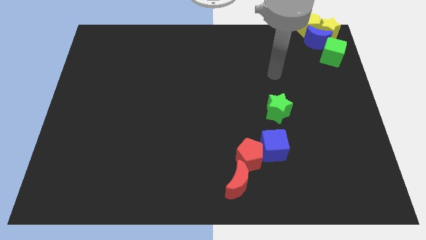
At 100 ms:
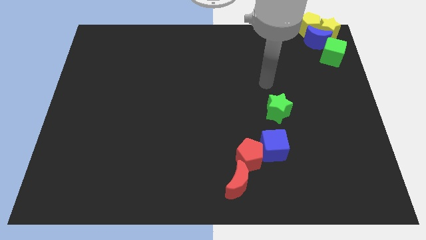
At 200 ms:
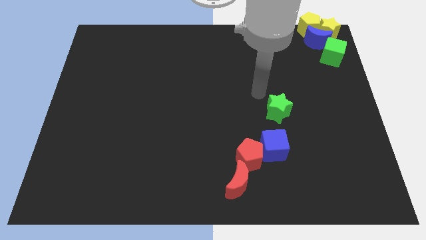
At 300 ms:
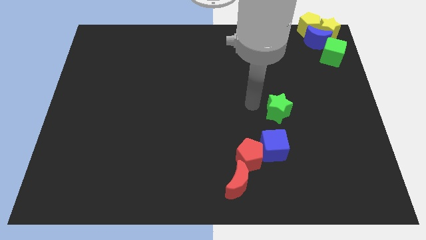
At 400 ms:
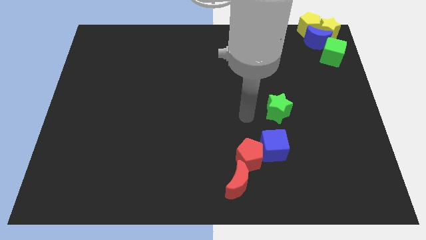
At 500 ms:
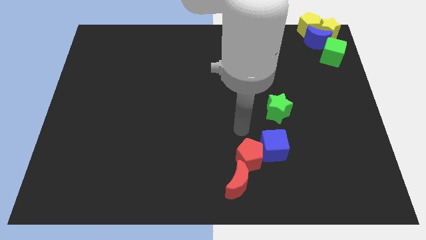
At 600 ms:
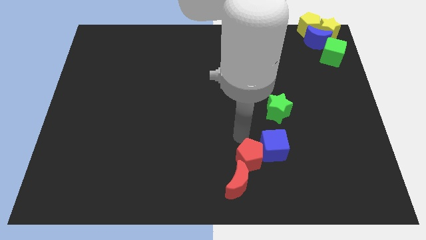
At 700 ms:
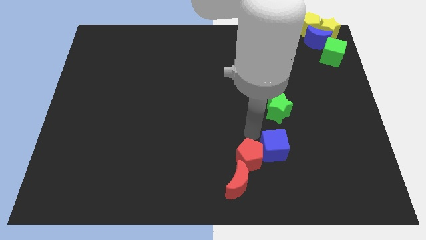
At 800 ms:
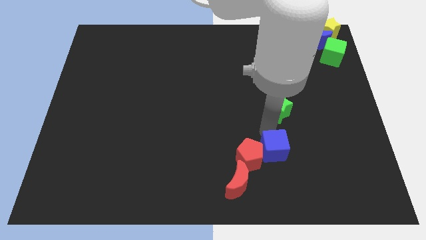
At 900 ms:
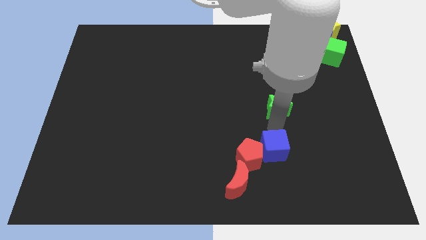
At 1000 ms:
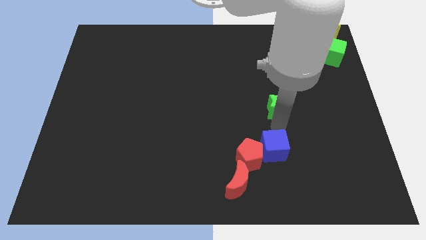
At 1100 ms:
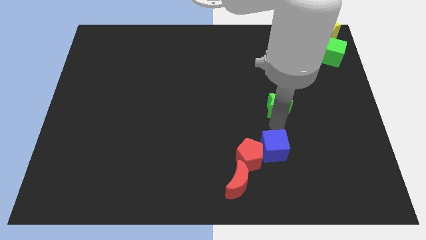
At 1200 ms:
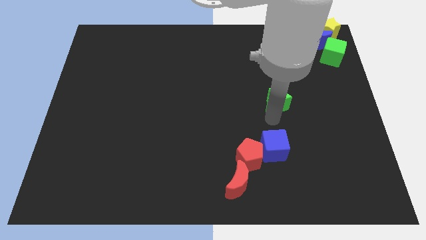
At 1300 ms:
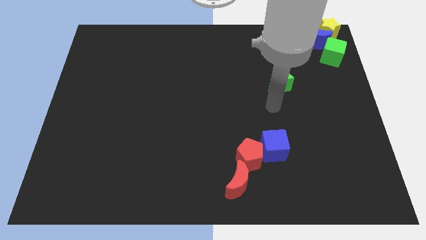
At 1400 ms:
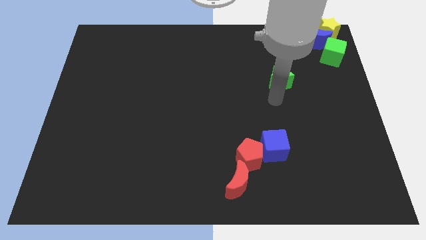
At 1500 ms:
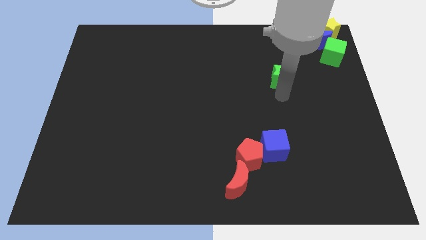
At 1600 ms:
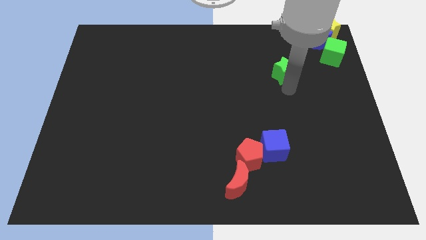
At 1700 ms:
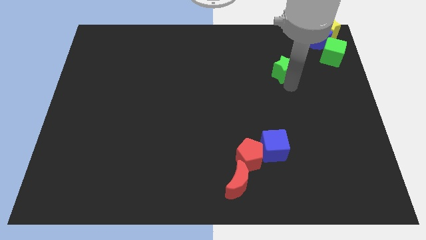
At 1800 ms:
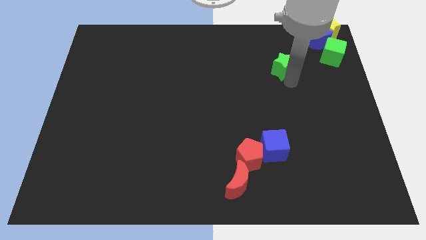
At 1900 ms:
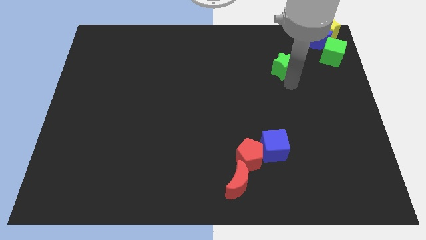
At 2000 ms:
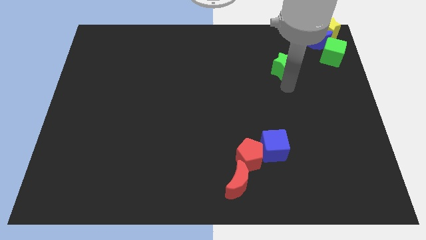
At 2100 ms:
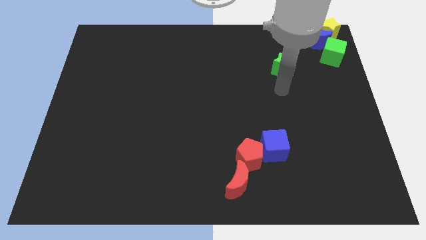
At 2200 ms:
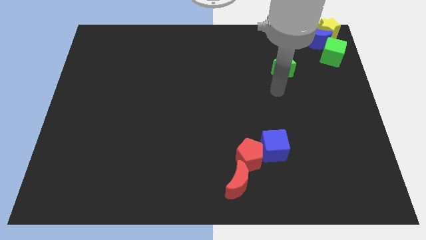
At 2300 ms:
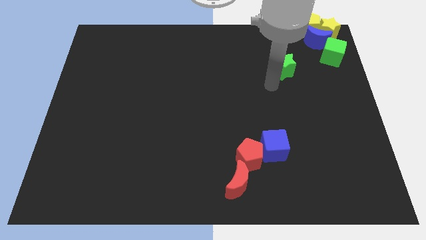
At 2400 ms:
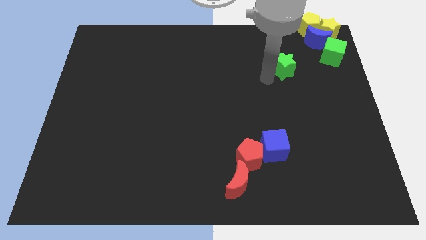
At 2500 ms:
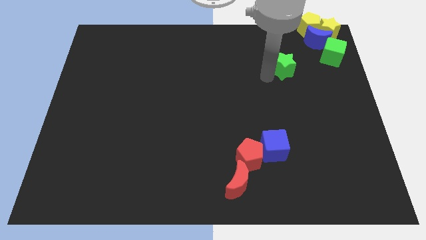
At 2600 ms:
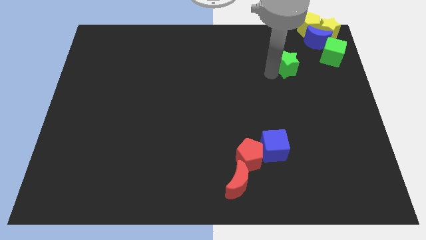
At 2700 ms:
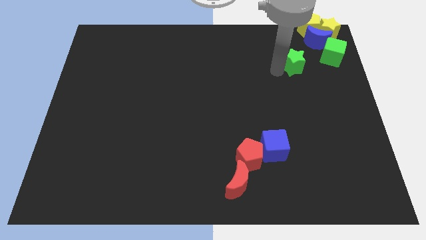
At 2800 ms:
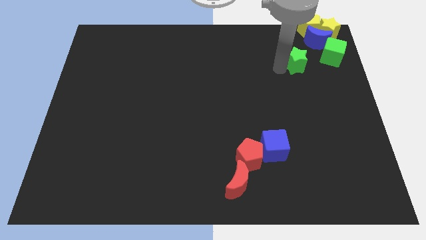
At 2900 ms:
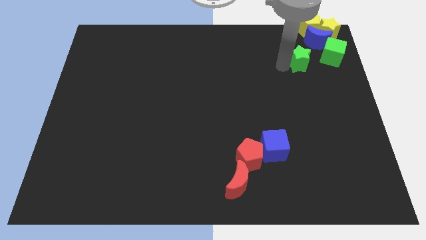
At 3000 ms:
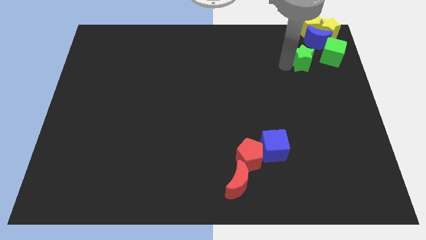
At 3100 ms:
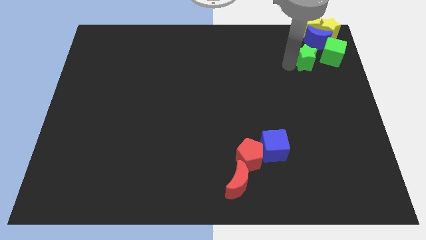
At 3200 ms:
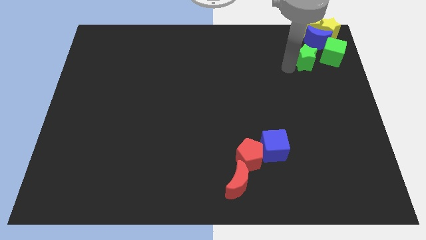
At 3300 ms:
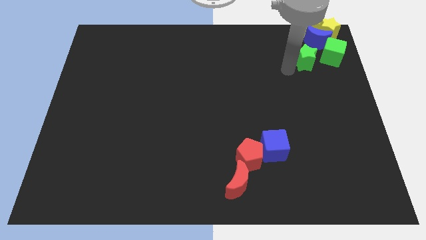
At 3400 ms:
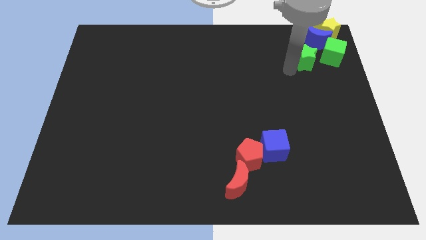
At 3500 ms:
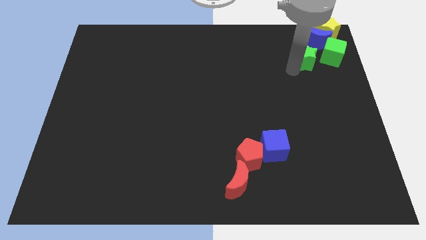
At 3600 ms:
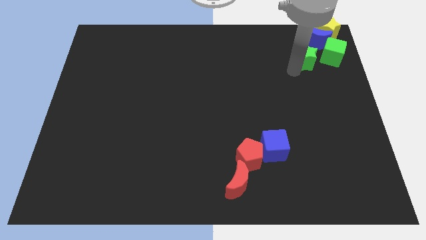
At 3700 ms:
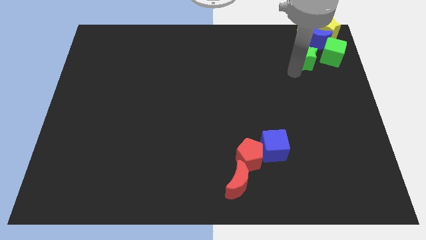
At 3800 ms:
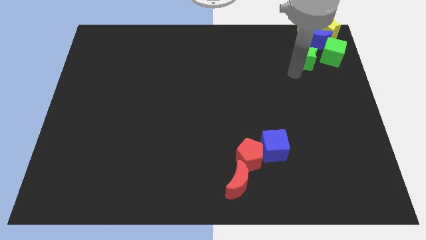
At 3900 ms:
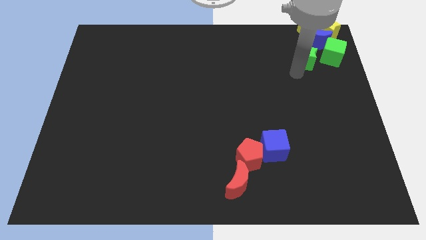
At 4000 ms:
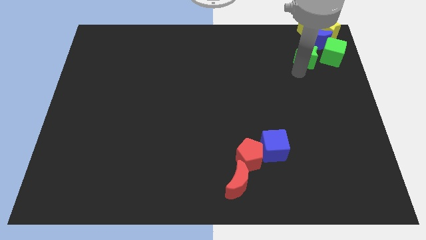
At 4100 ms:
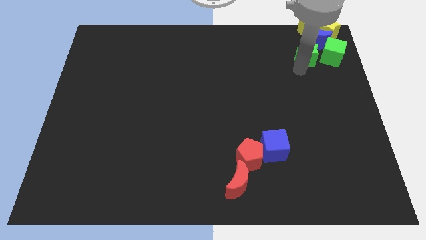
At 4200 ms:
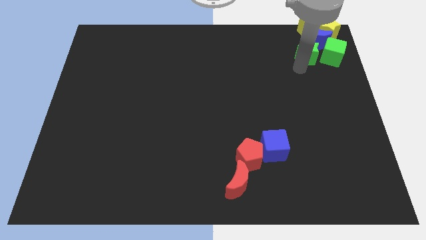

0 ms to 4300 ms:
move green star below blue crescent

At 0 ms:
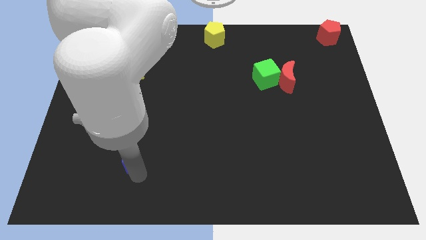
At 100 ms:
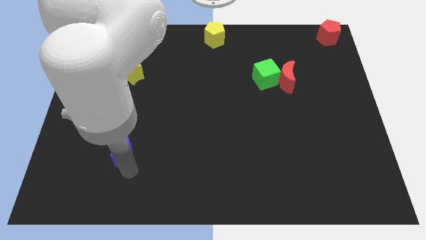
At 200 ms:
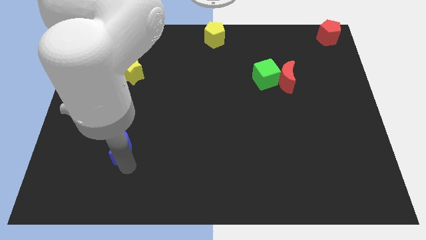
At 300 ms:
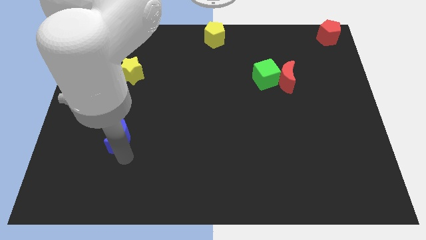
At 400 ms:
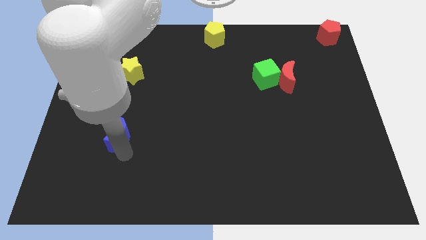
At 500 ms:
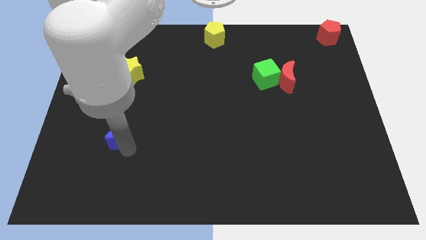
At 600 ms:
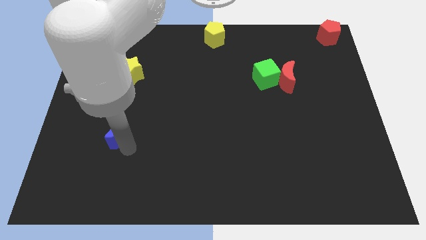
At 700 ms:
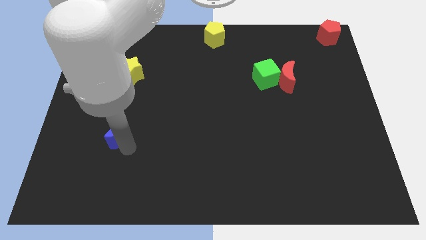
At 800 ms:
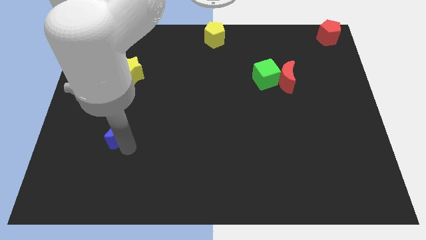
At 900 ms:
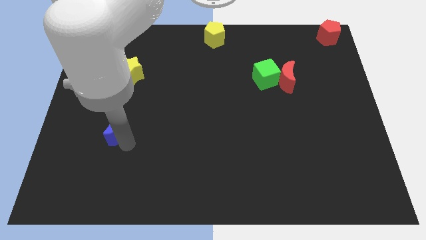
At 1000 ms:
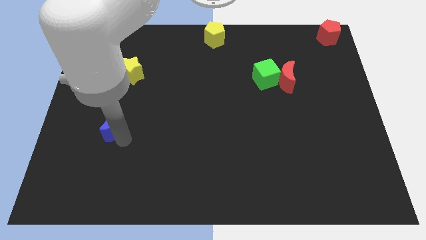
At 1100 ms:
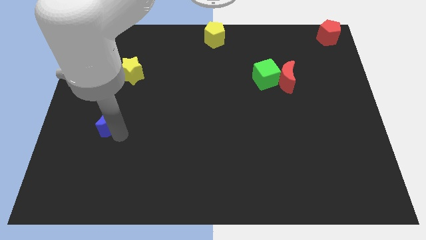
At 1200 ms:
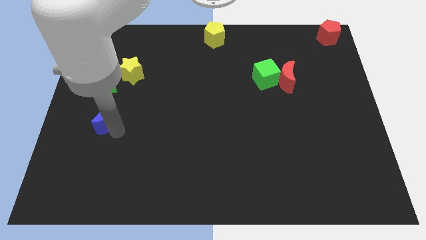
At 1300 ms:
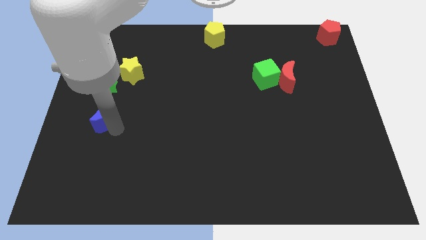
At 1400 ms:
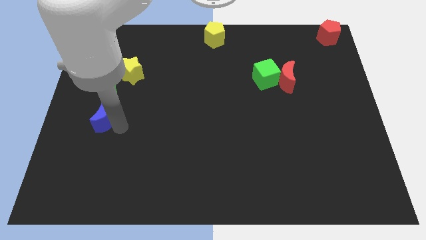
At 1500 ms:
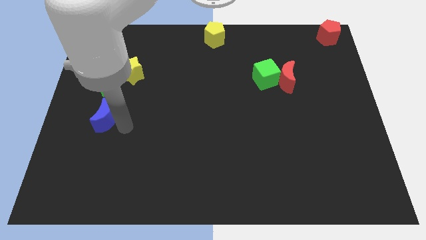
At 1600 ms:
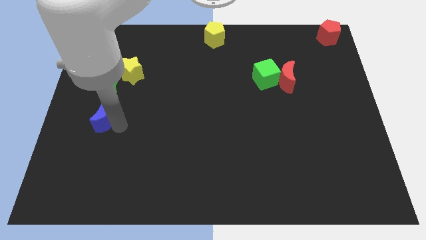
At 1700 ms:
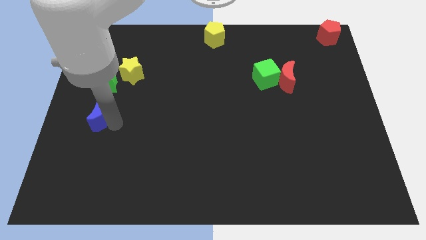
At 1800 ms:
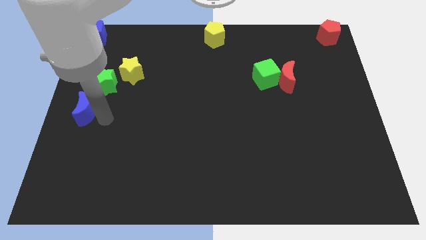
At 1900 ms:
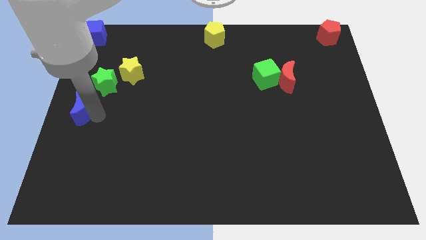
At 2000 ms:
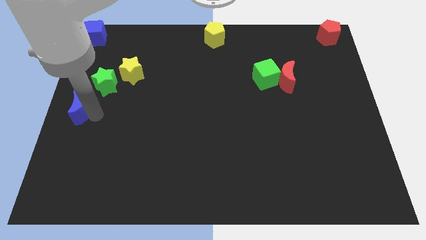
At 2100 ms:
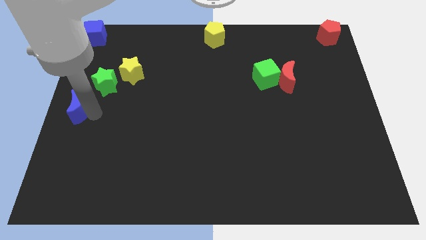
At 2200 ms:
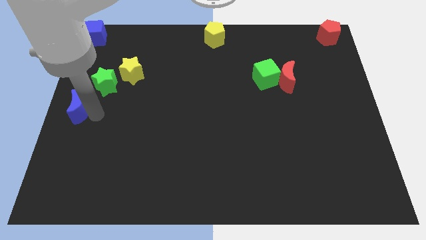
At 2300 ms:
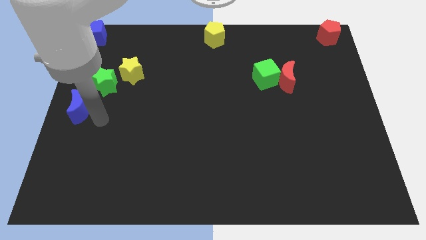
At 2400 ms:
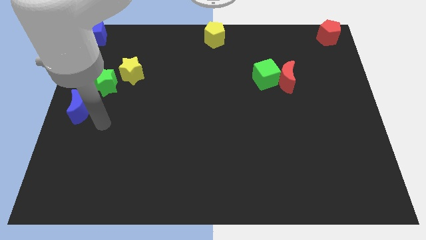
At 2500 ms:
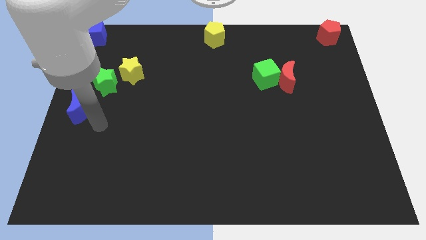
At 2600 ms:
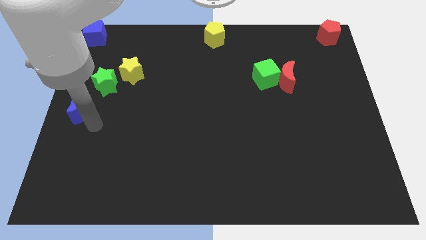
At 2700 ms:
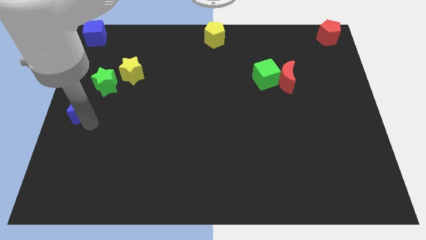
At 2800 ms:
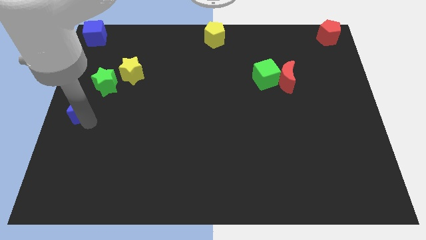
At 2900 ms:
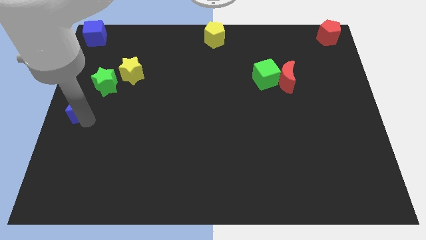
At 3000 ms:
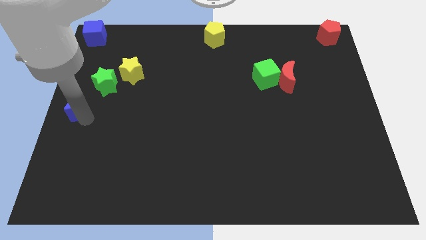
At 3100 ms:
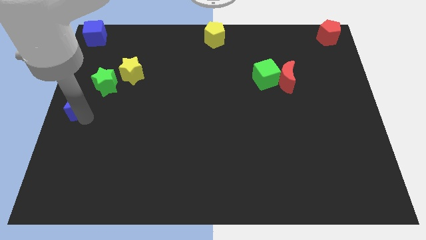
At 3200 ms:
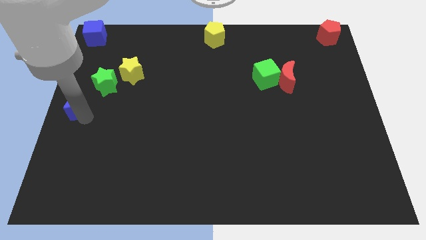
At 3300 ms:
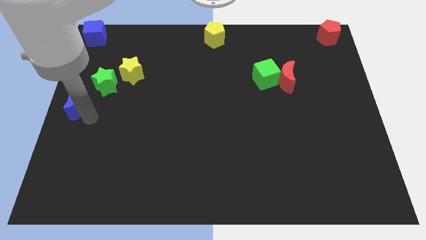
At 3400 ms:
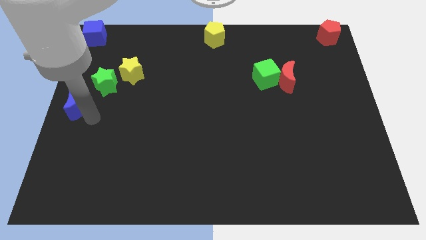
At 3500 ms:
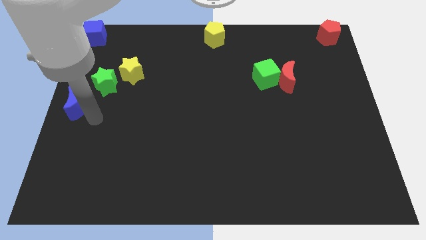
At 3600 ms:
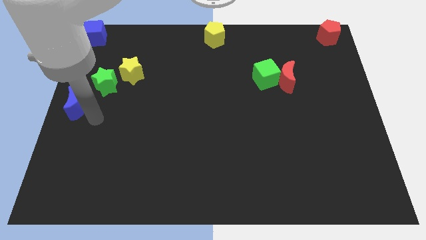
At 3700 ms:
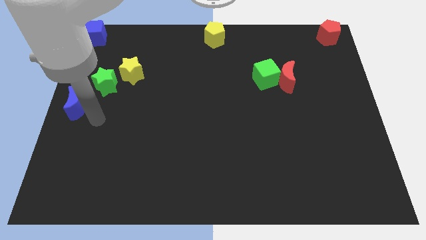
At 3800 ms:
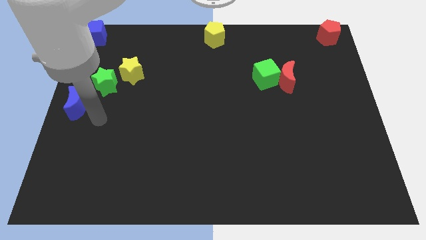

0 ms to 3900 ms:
move the blue crescent to the center left of the board

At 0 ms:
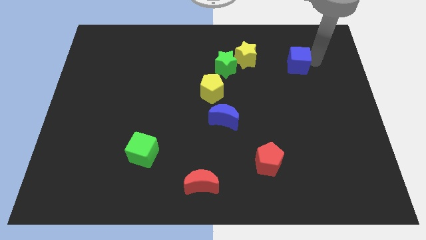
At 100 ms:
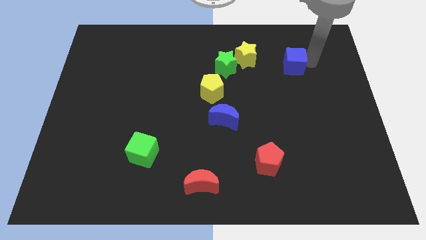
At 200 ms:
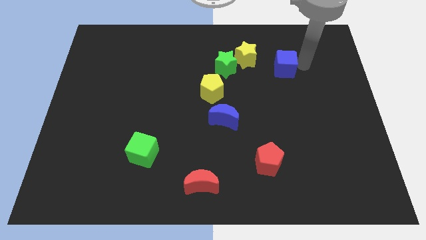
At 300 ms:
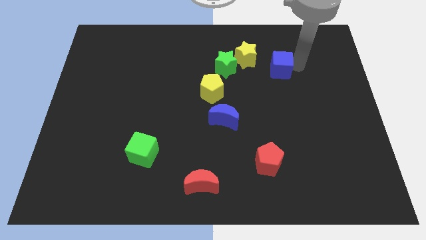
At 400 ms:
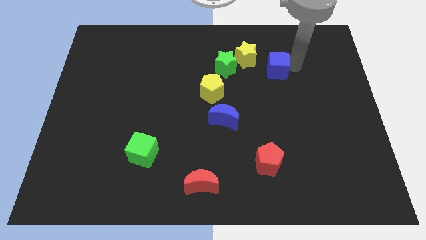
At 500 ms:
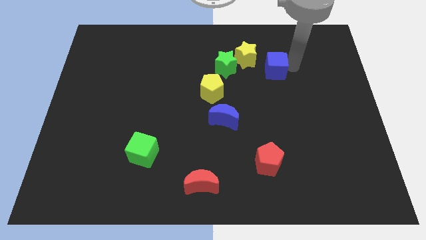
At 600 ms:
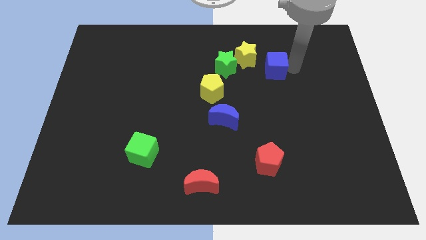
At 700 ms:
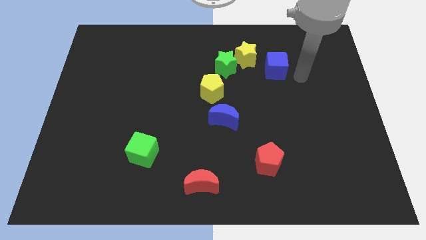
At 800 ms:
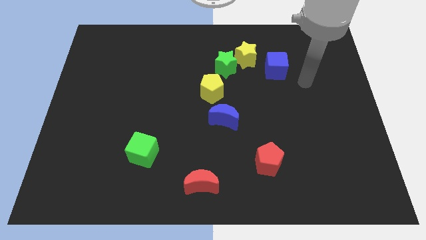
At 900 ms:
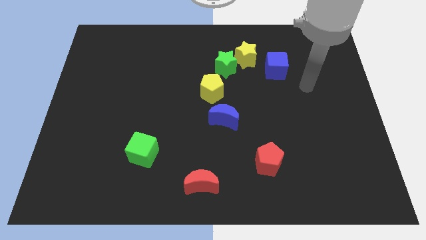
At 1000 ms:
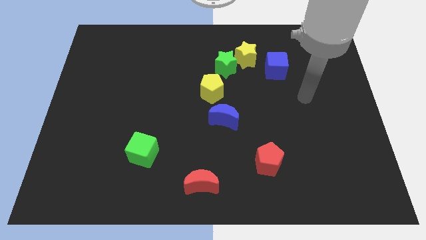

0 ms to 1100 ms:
move the blue cube close to the yellow star
